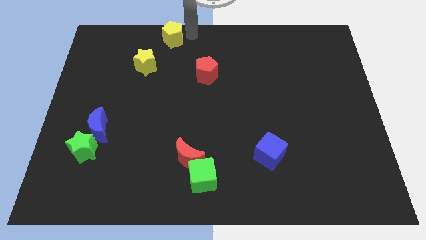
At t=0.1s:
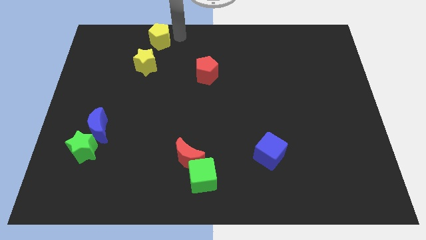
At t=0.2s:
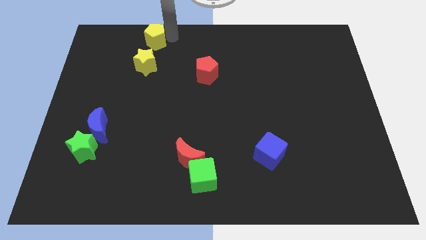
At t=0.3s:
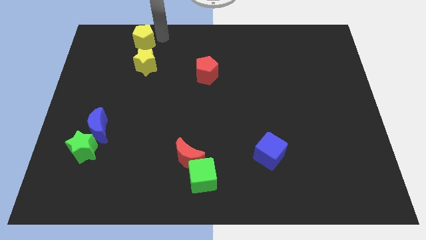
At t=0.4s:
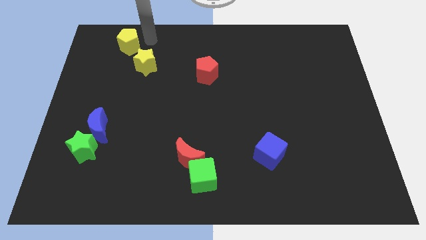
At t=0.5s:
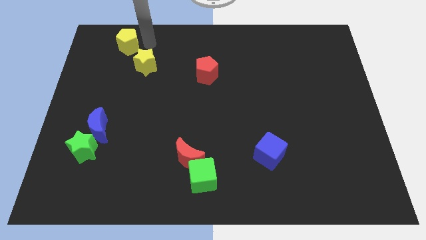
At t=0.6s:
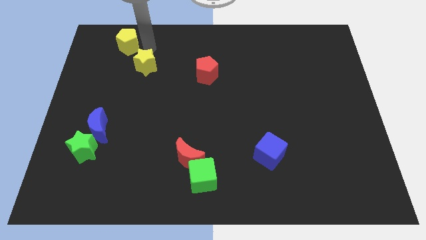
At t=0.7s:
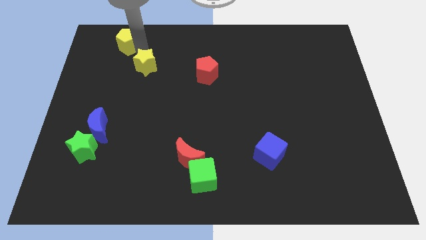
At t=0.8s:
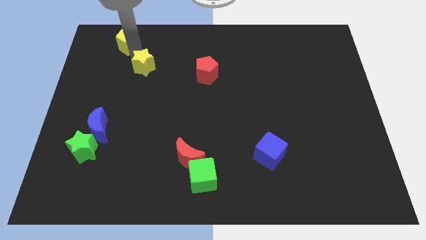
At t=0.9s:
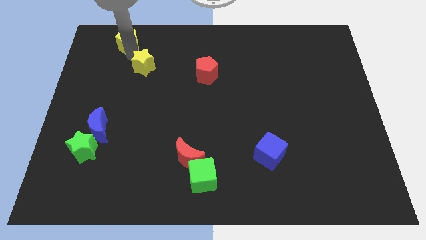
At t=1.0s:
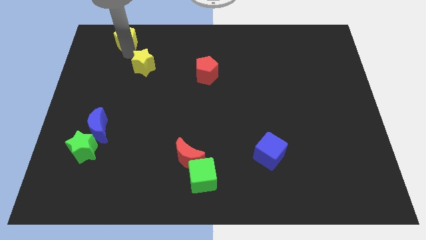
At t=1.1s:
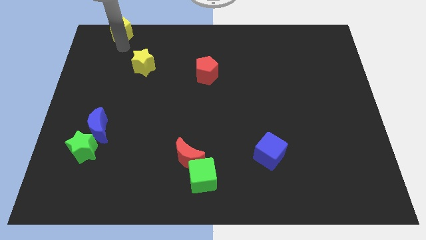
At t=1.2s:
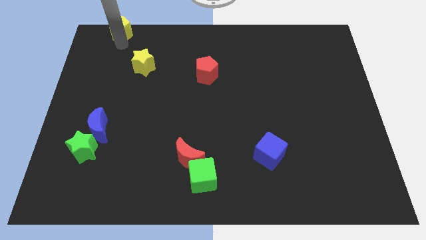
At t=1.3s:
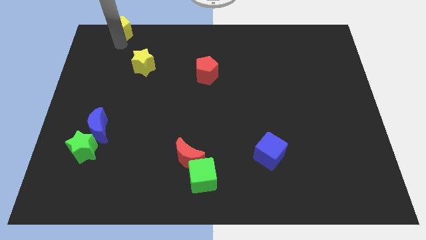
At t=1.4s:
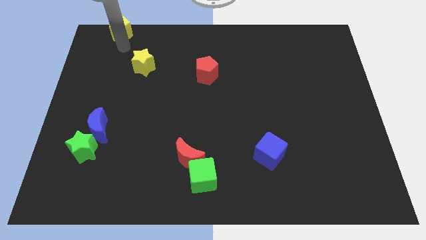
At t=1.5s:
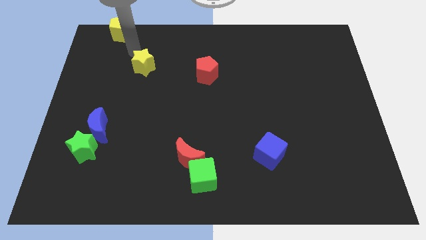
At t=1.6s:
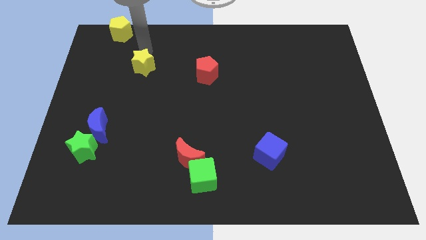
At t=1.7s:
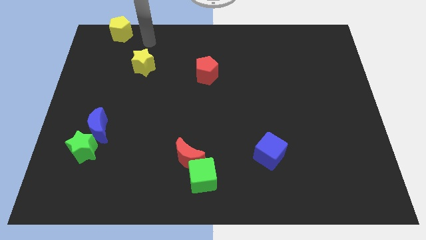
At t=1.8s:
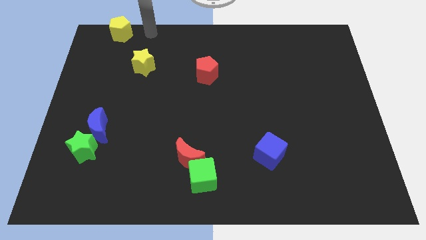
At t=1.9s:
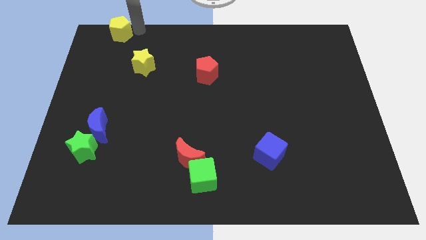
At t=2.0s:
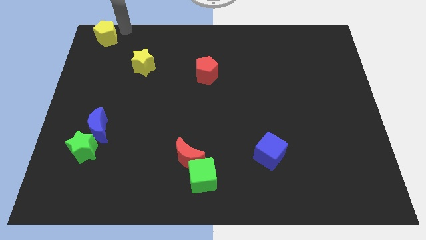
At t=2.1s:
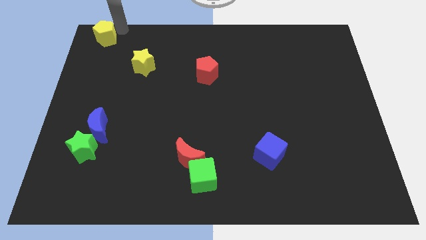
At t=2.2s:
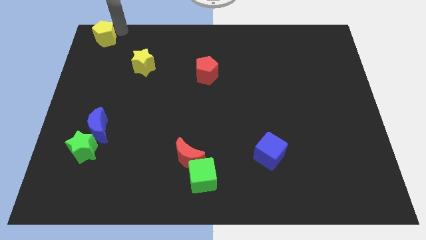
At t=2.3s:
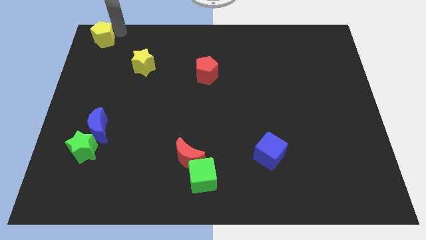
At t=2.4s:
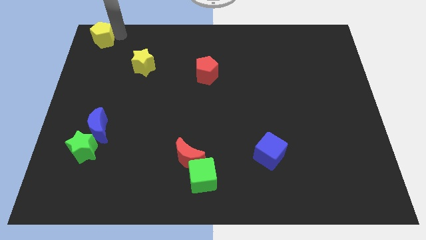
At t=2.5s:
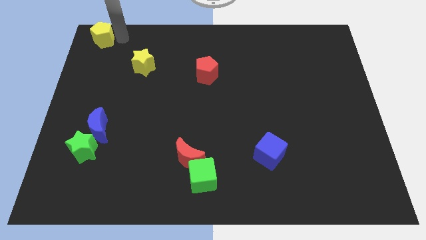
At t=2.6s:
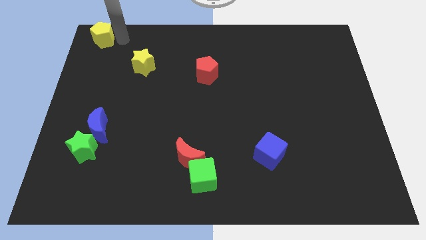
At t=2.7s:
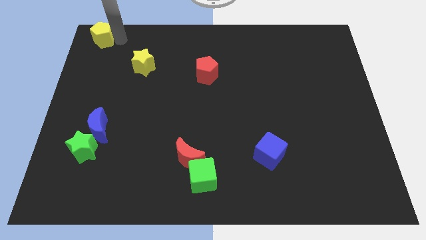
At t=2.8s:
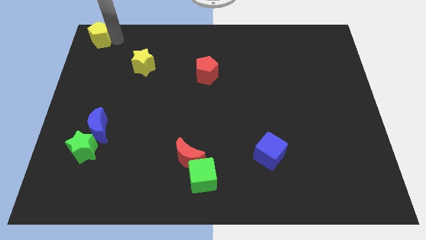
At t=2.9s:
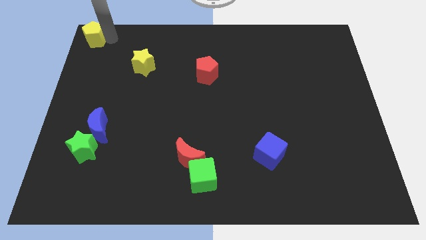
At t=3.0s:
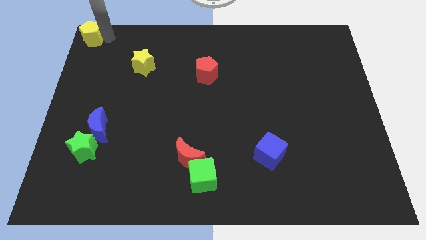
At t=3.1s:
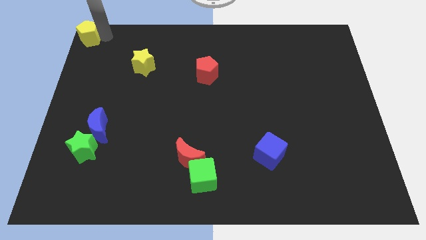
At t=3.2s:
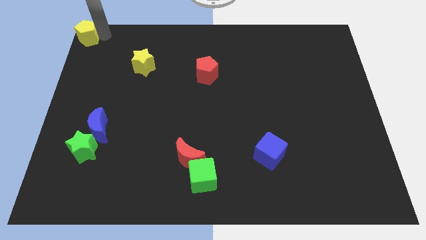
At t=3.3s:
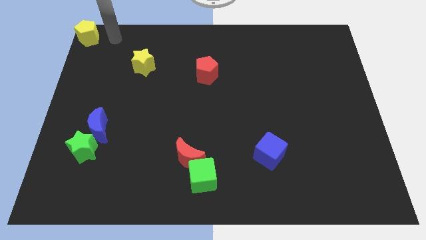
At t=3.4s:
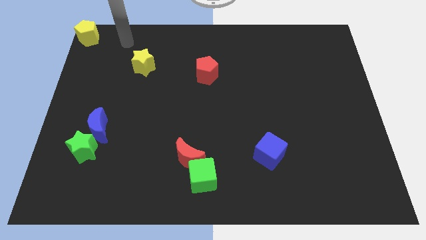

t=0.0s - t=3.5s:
place the yellow pentagon at the top left corner

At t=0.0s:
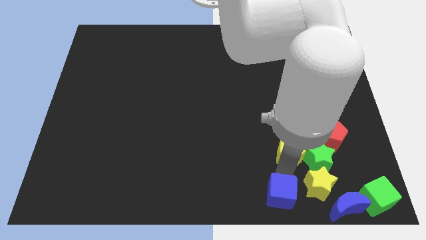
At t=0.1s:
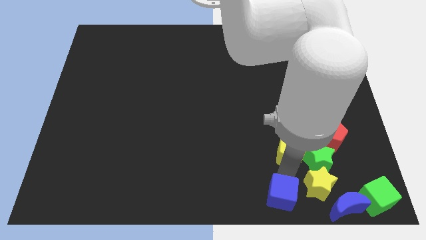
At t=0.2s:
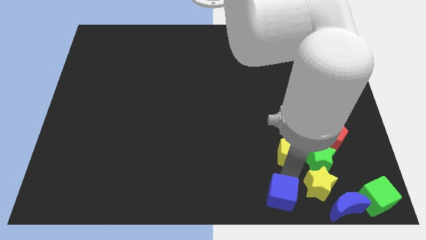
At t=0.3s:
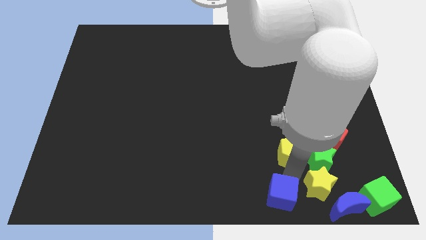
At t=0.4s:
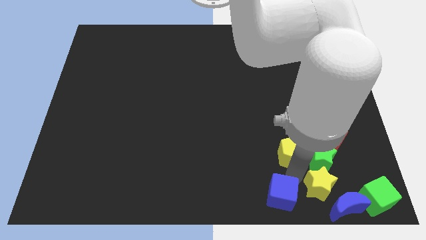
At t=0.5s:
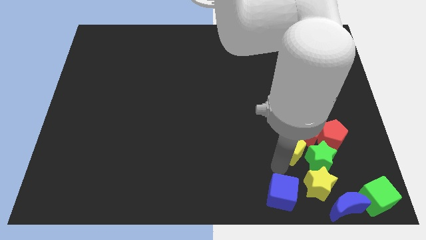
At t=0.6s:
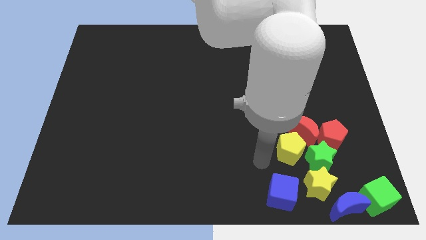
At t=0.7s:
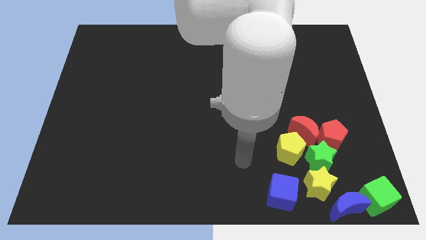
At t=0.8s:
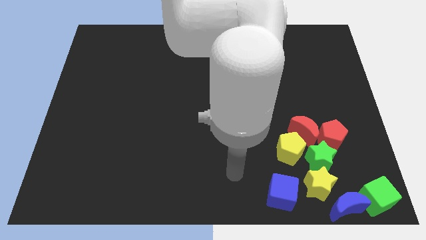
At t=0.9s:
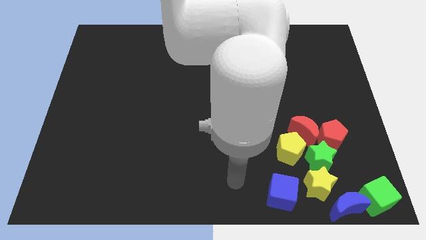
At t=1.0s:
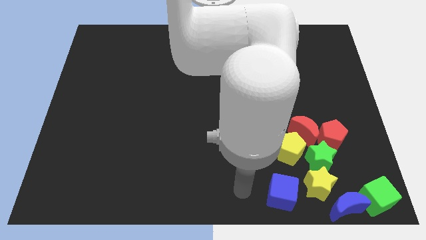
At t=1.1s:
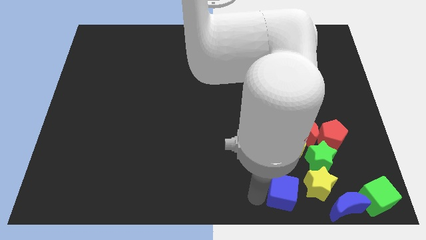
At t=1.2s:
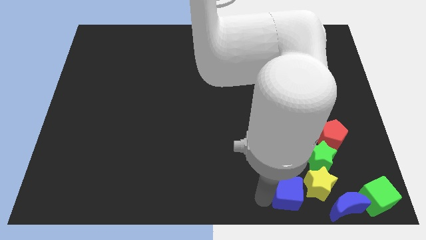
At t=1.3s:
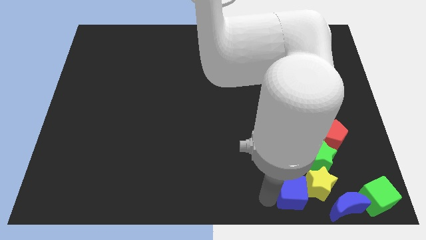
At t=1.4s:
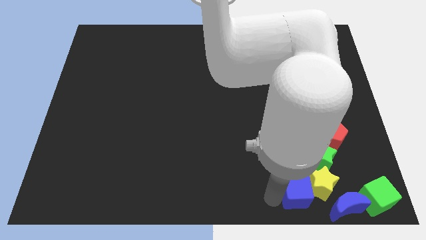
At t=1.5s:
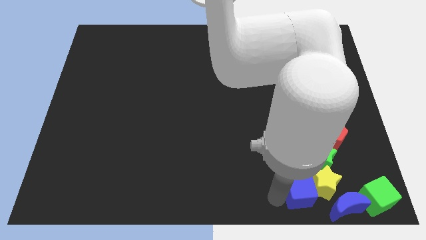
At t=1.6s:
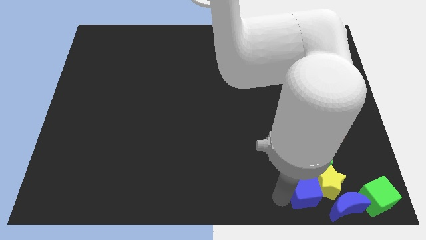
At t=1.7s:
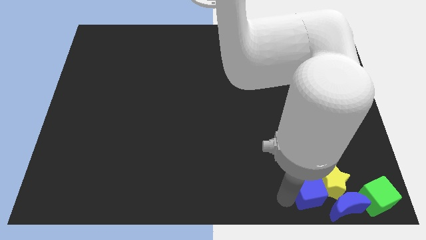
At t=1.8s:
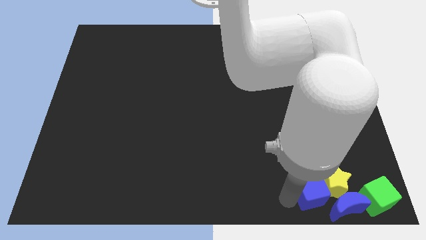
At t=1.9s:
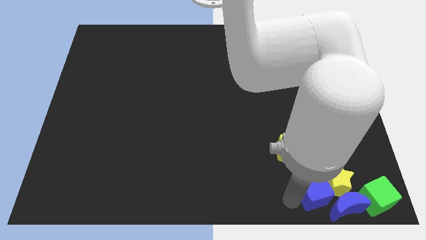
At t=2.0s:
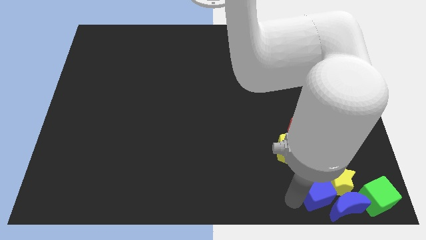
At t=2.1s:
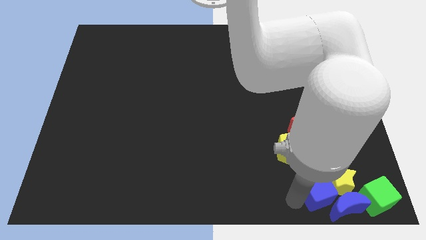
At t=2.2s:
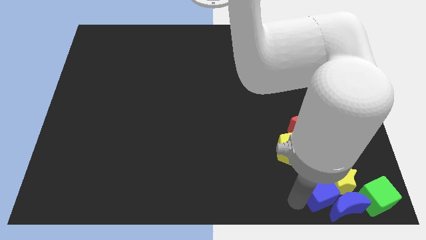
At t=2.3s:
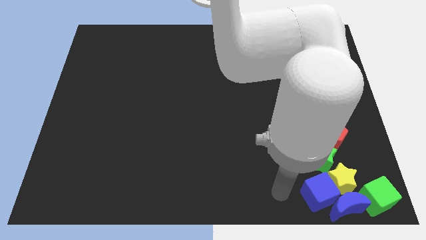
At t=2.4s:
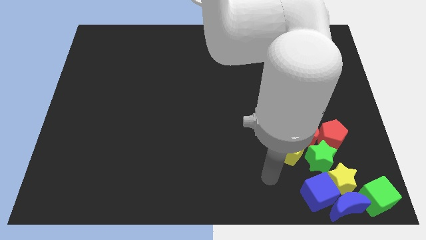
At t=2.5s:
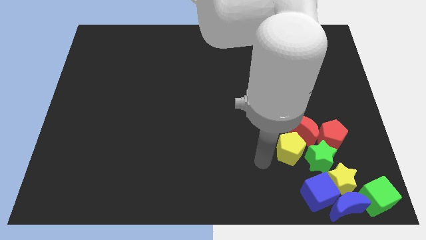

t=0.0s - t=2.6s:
push the blue cube into the yellow star

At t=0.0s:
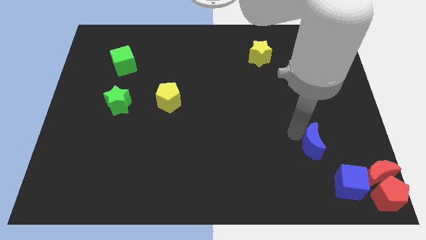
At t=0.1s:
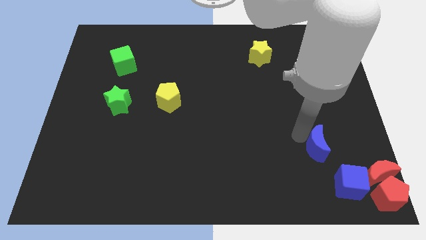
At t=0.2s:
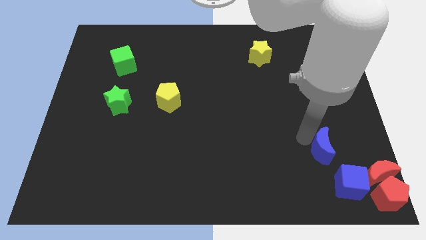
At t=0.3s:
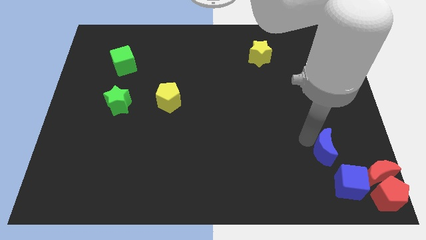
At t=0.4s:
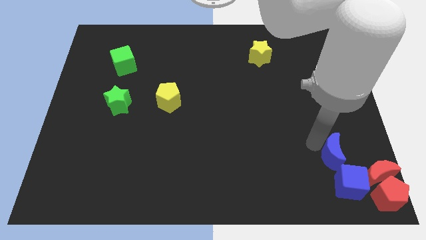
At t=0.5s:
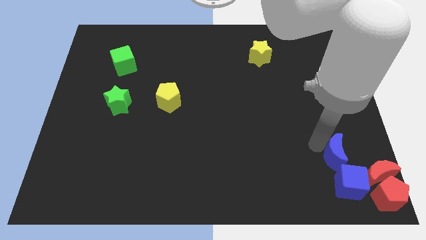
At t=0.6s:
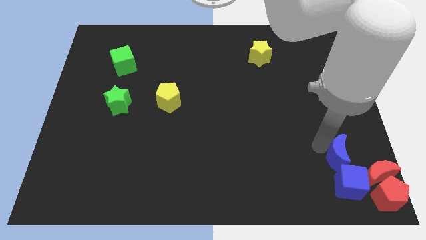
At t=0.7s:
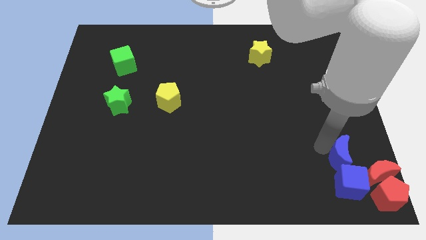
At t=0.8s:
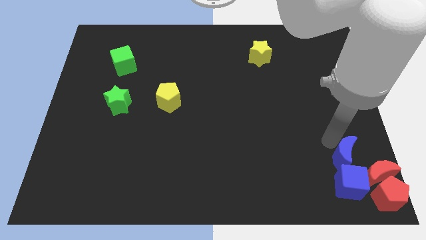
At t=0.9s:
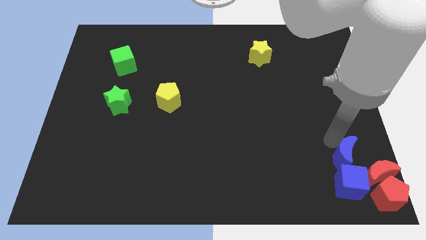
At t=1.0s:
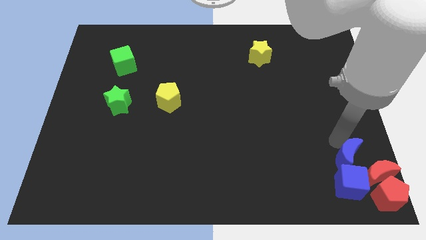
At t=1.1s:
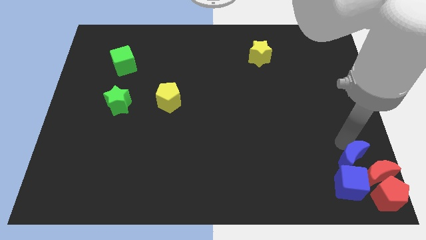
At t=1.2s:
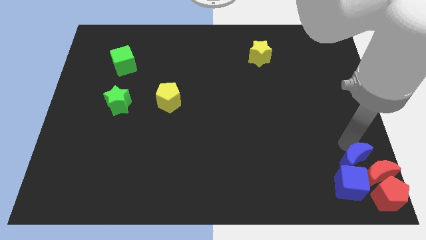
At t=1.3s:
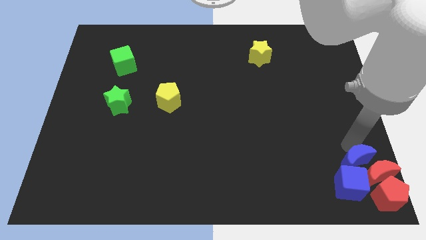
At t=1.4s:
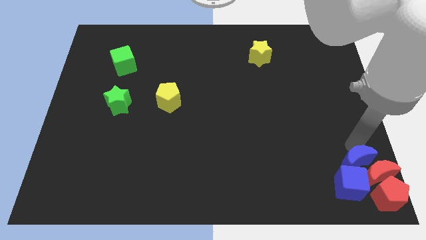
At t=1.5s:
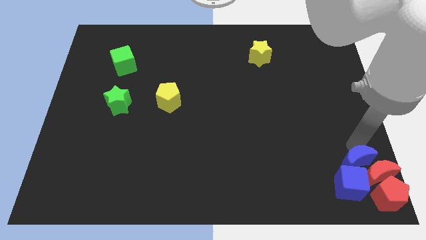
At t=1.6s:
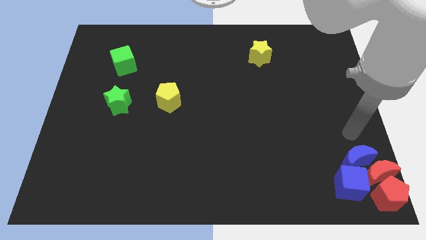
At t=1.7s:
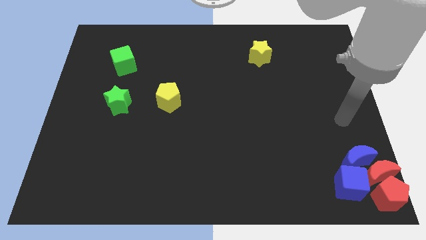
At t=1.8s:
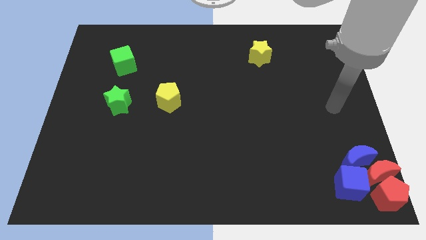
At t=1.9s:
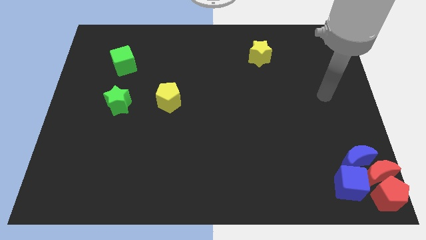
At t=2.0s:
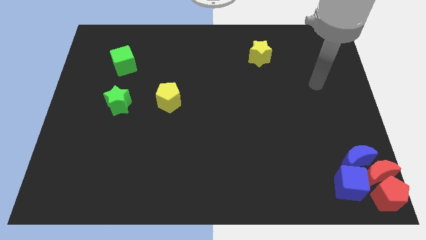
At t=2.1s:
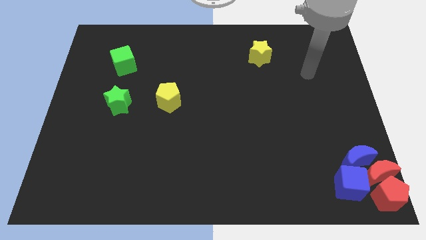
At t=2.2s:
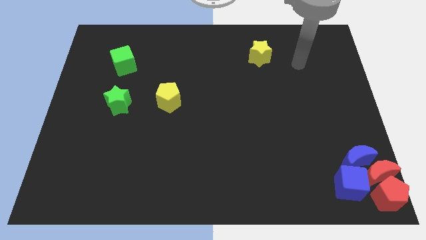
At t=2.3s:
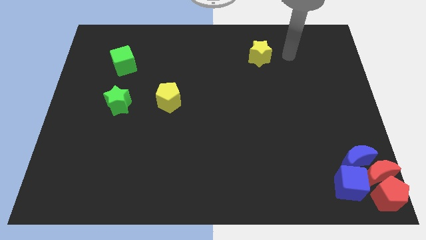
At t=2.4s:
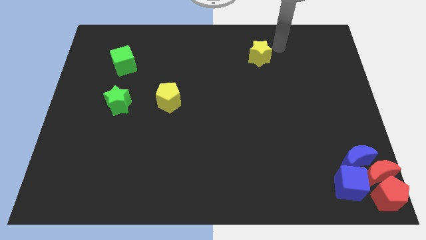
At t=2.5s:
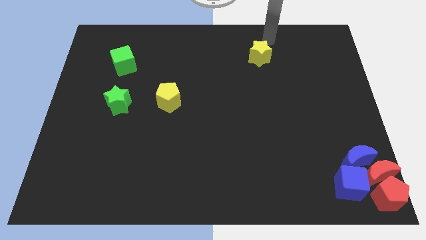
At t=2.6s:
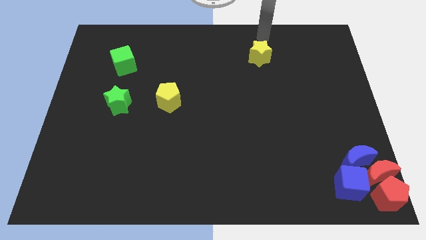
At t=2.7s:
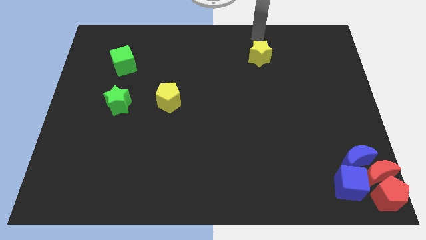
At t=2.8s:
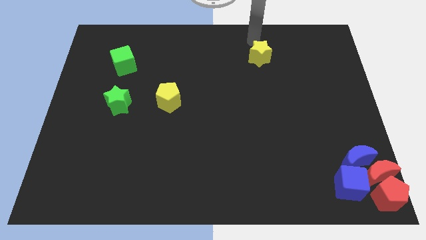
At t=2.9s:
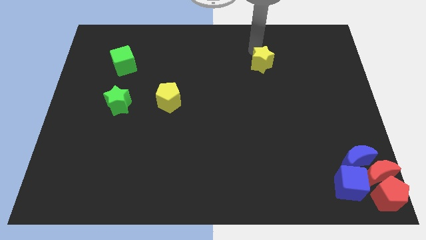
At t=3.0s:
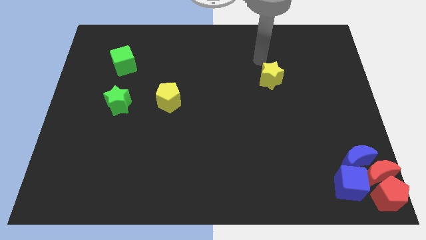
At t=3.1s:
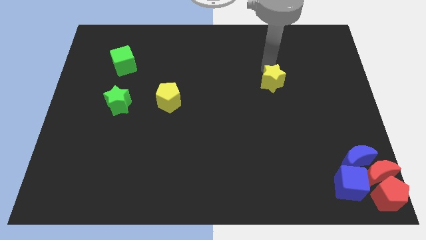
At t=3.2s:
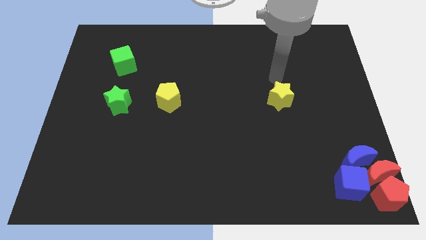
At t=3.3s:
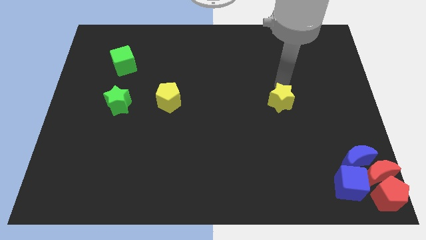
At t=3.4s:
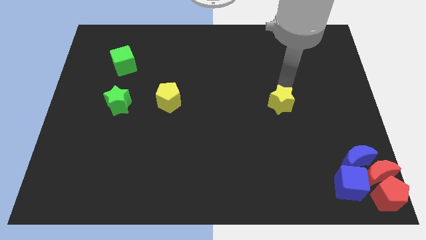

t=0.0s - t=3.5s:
push the yellow star to the right side of the yellow pentagon
